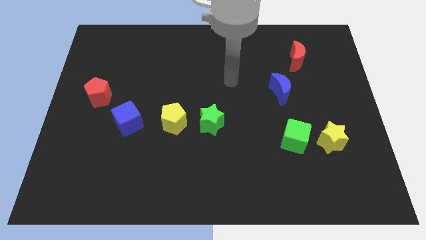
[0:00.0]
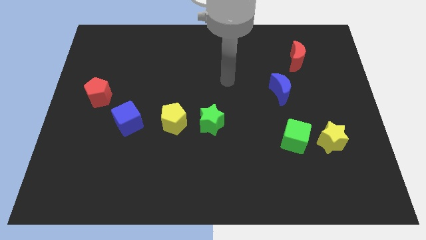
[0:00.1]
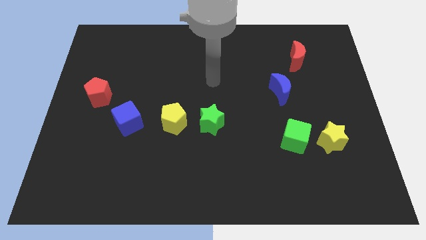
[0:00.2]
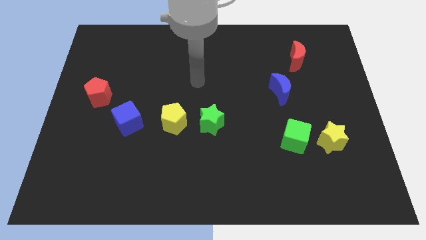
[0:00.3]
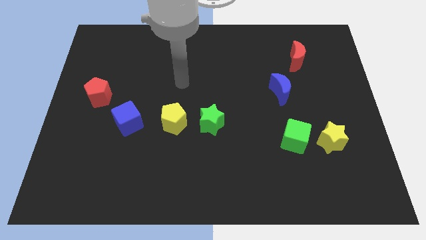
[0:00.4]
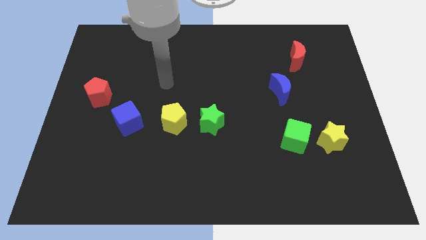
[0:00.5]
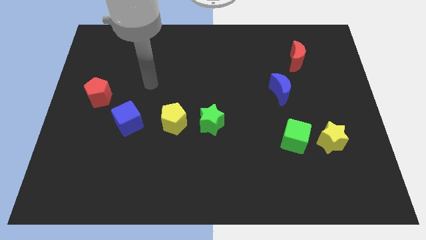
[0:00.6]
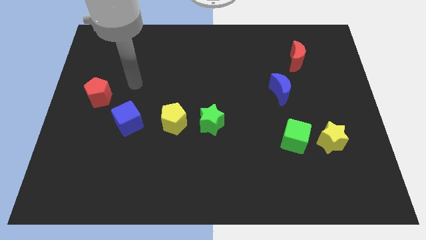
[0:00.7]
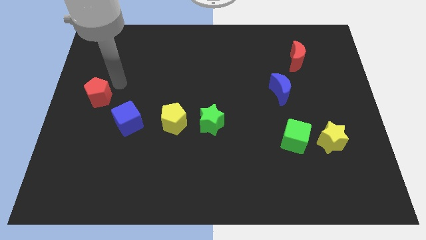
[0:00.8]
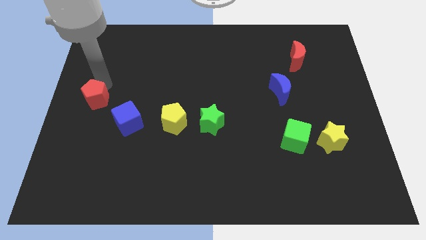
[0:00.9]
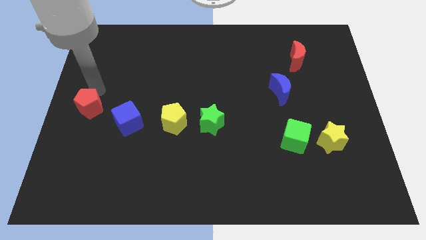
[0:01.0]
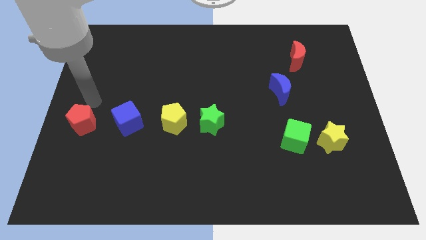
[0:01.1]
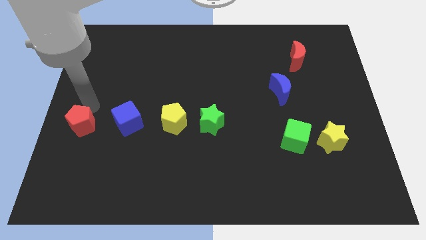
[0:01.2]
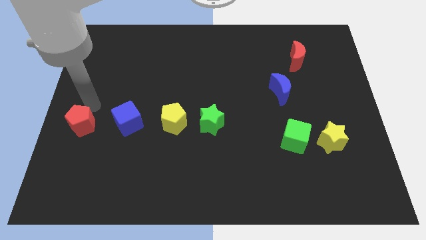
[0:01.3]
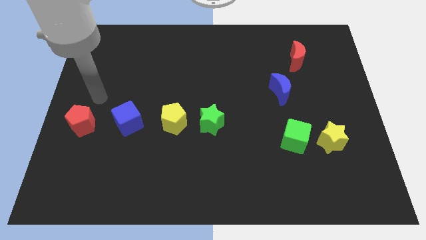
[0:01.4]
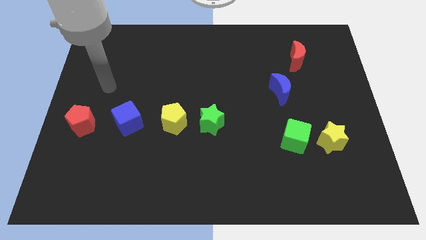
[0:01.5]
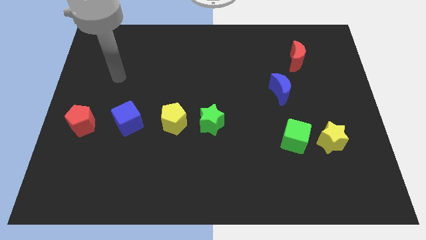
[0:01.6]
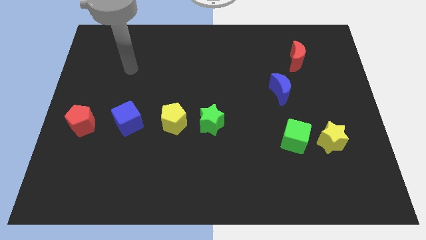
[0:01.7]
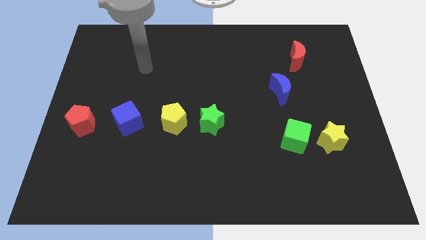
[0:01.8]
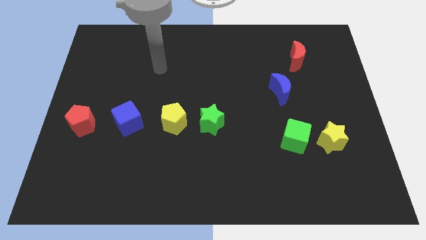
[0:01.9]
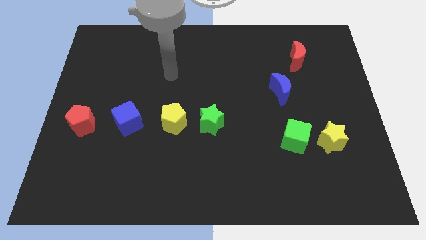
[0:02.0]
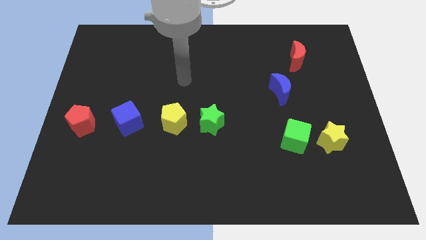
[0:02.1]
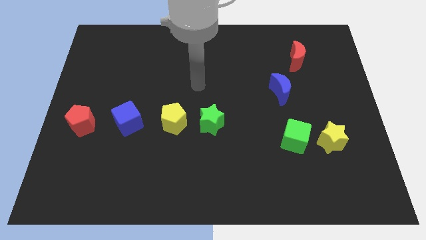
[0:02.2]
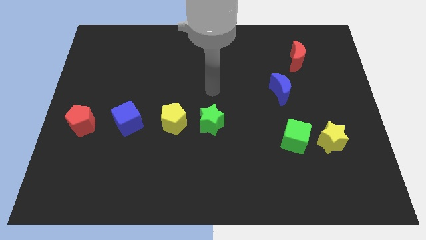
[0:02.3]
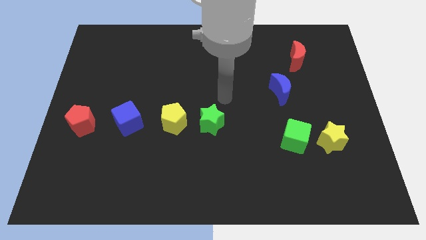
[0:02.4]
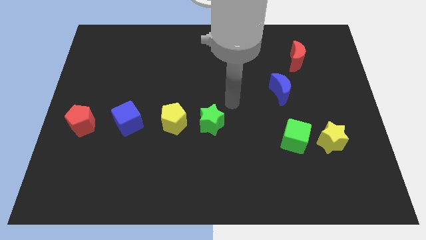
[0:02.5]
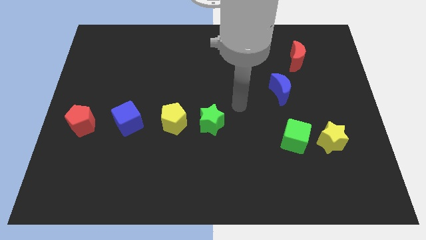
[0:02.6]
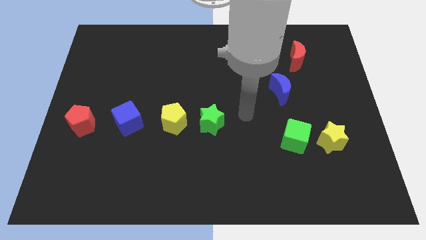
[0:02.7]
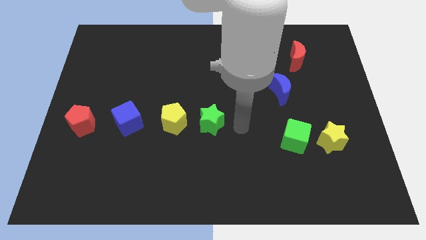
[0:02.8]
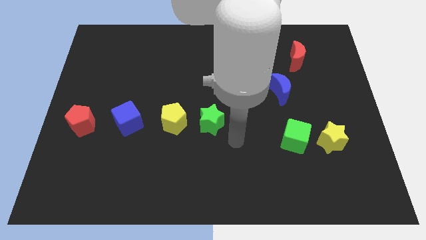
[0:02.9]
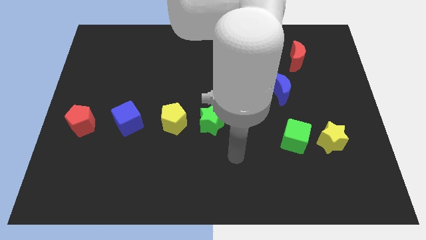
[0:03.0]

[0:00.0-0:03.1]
place the red pentagon on the left side of blue cube

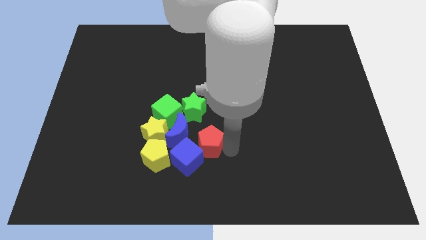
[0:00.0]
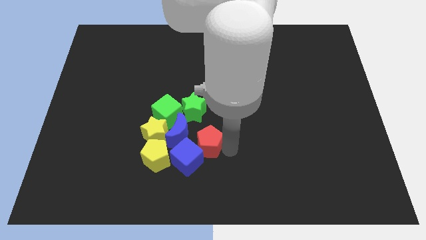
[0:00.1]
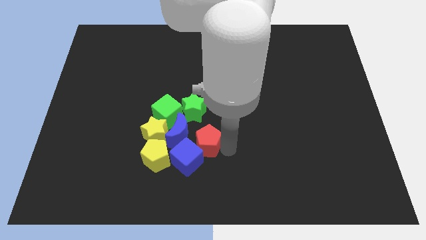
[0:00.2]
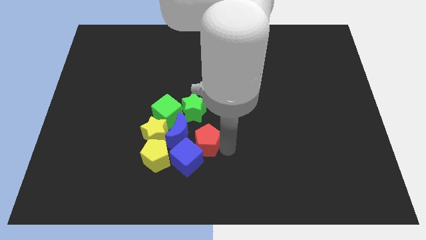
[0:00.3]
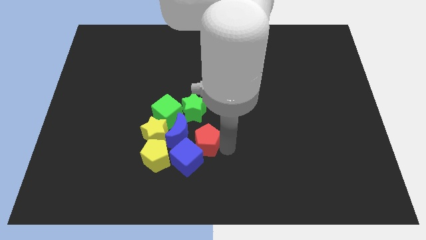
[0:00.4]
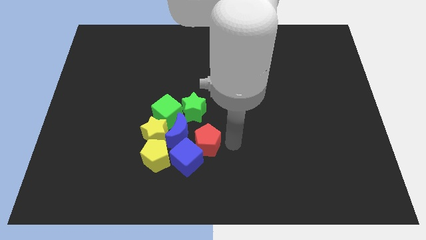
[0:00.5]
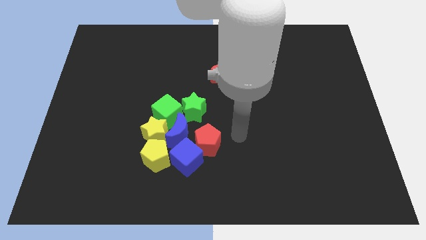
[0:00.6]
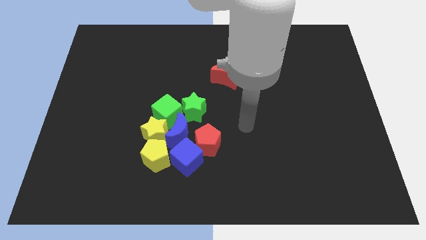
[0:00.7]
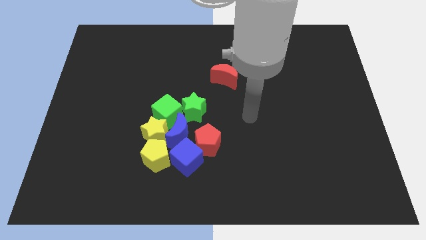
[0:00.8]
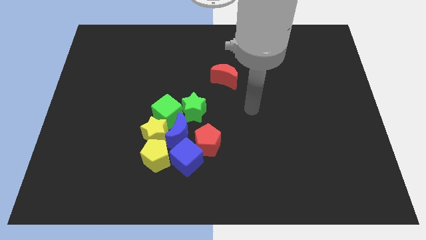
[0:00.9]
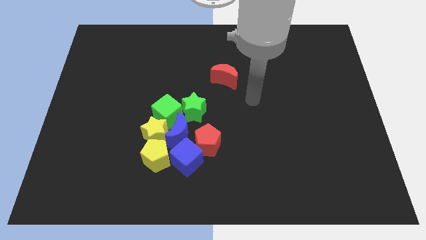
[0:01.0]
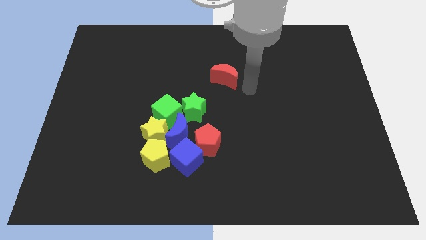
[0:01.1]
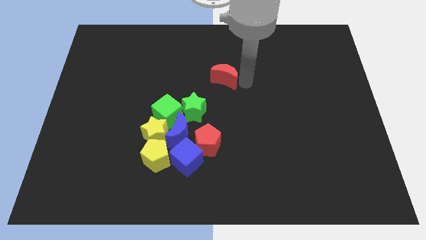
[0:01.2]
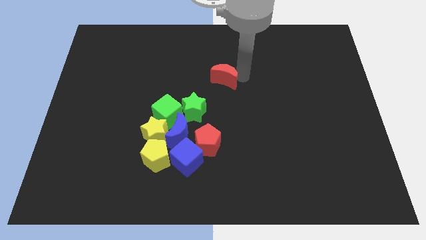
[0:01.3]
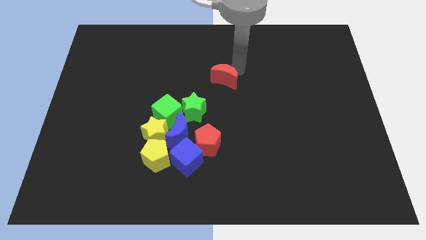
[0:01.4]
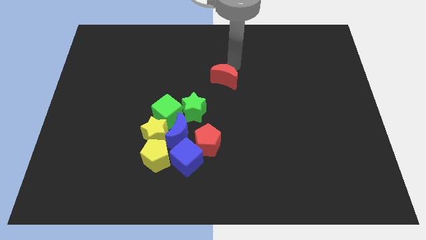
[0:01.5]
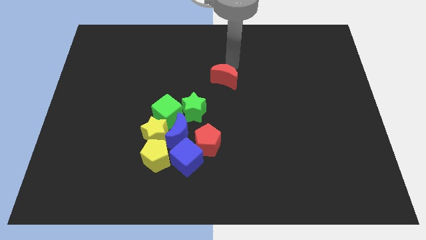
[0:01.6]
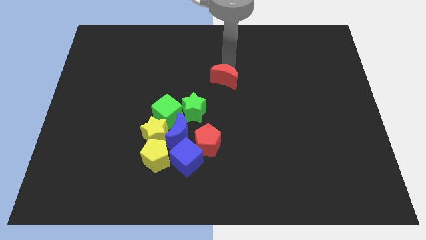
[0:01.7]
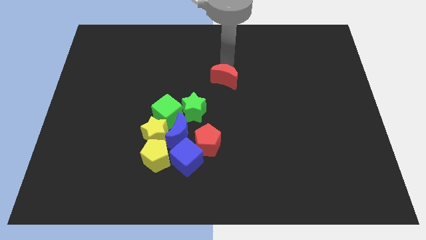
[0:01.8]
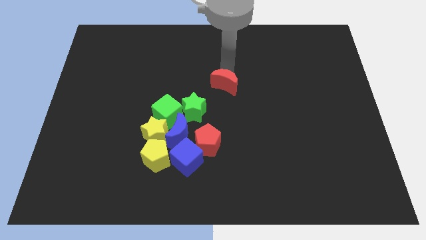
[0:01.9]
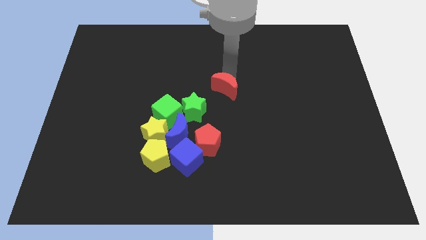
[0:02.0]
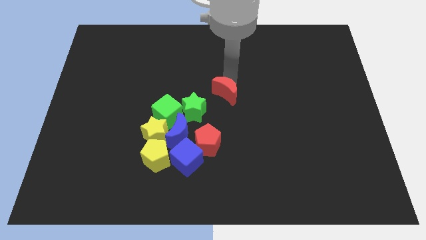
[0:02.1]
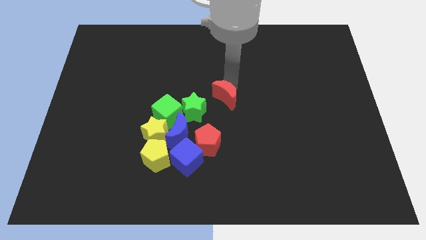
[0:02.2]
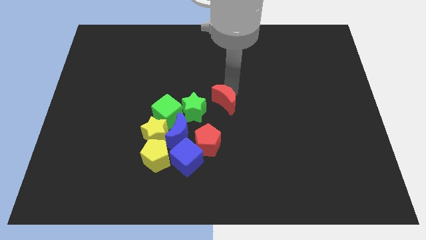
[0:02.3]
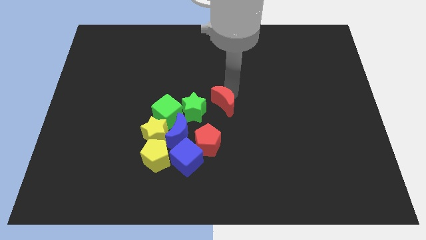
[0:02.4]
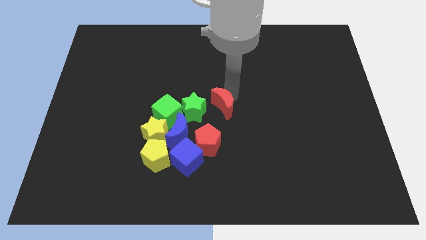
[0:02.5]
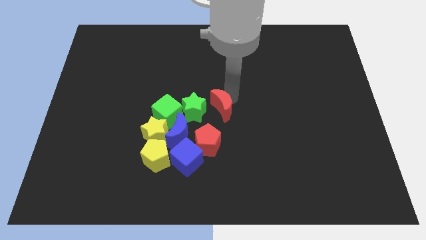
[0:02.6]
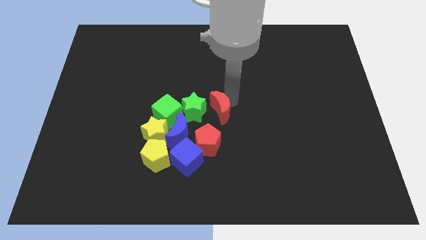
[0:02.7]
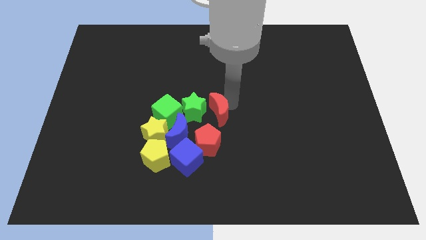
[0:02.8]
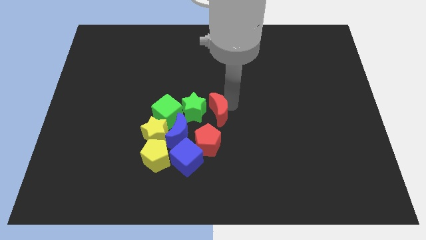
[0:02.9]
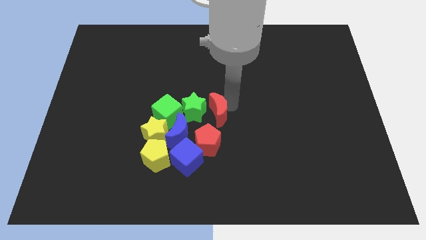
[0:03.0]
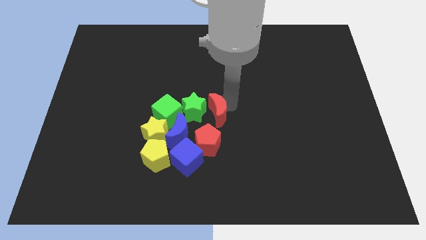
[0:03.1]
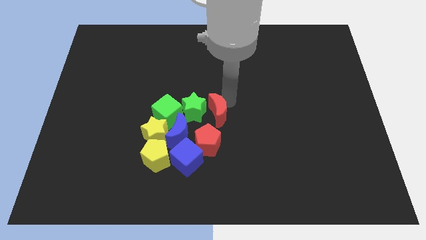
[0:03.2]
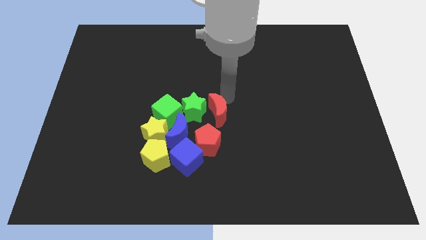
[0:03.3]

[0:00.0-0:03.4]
move the red crescent towards the group of blocks

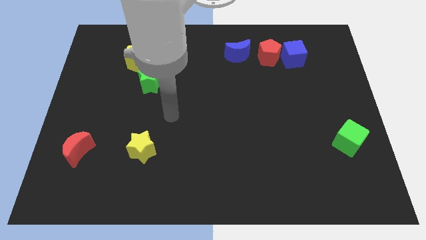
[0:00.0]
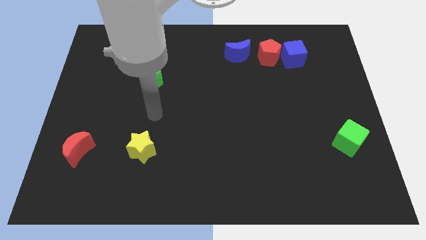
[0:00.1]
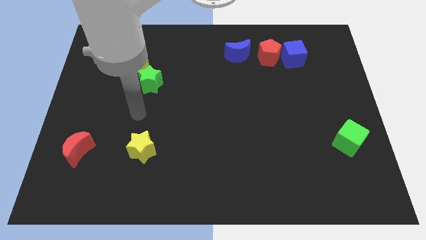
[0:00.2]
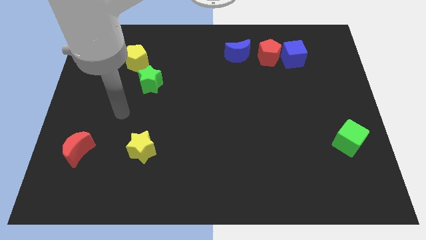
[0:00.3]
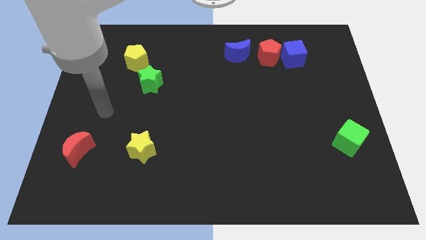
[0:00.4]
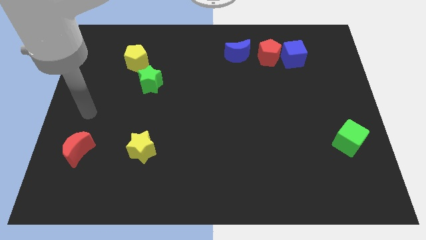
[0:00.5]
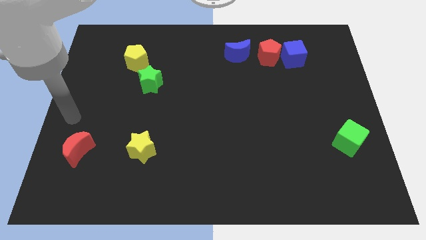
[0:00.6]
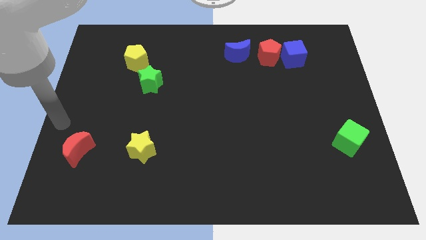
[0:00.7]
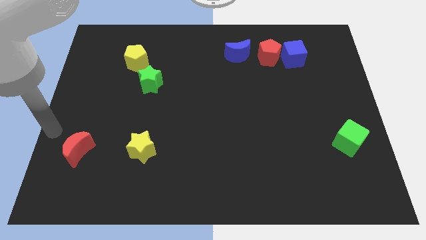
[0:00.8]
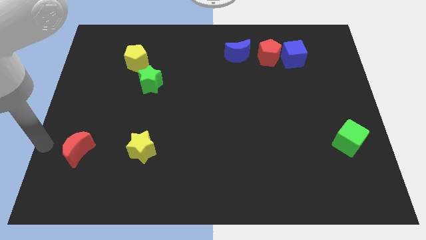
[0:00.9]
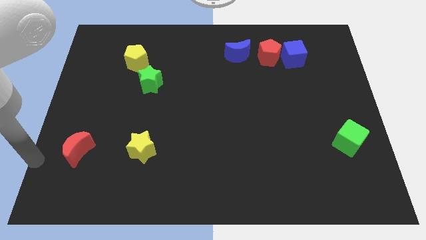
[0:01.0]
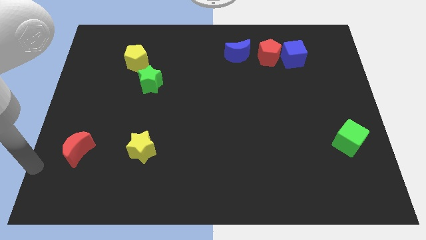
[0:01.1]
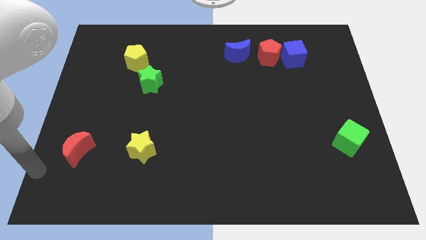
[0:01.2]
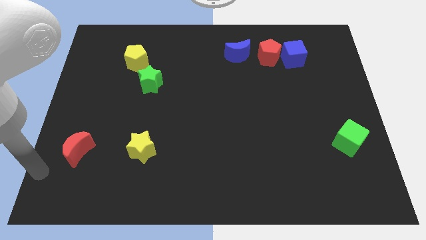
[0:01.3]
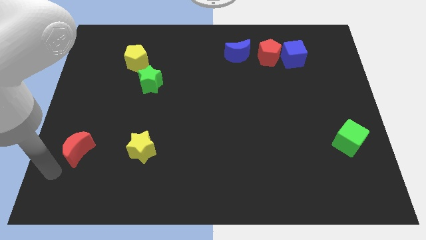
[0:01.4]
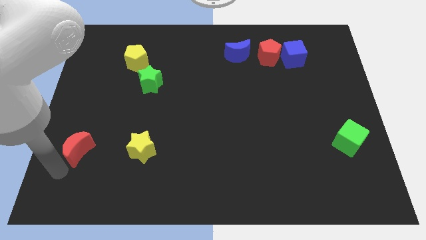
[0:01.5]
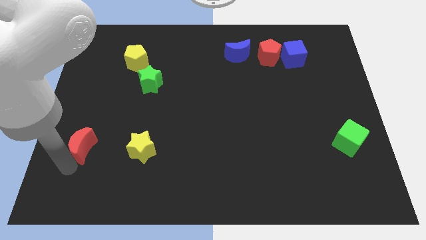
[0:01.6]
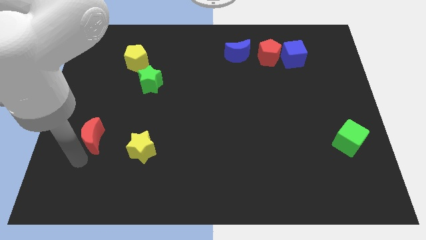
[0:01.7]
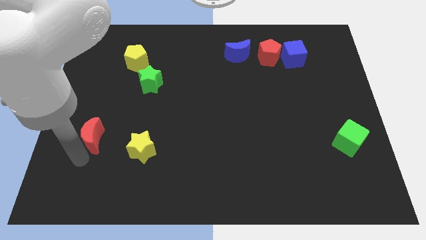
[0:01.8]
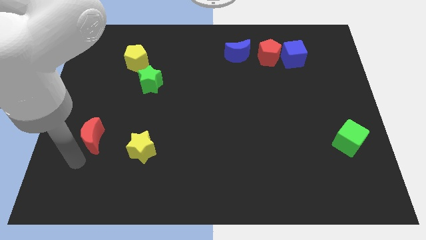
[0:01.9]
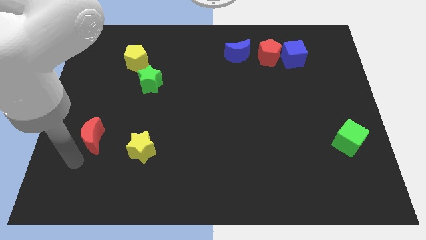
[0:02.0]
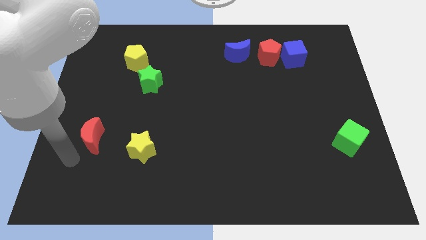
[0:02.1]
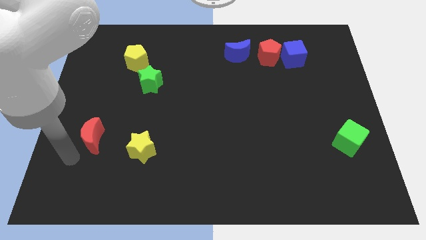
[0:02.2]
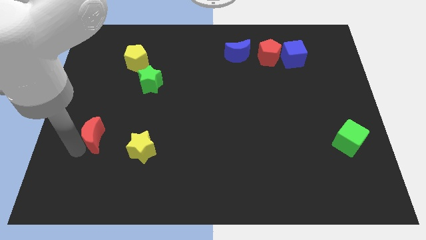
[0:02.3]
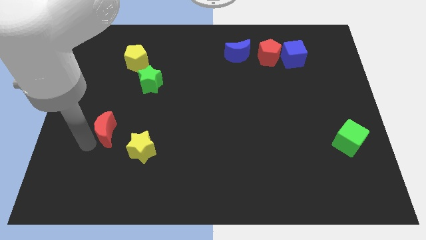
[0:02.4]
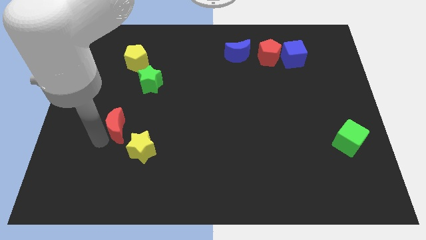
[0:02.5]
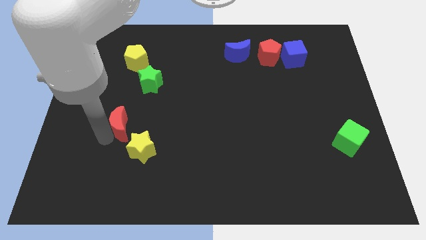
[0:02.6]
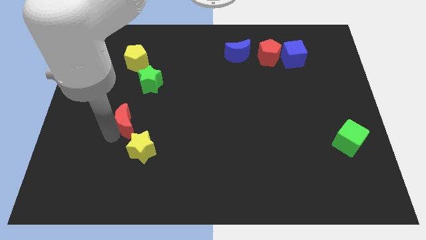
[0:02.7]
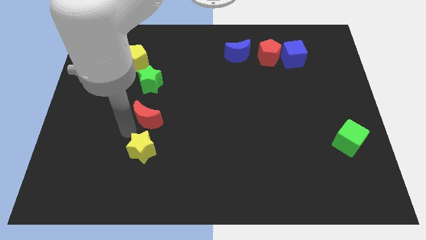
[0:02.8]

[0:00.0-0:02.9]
place the red moon above the yellow star
